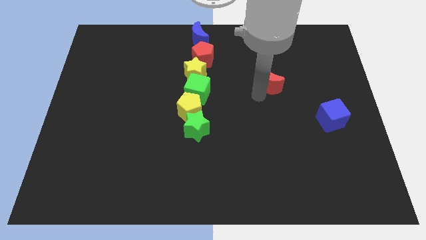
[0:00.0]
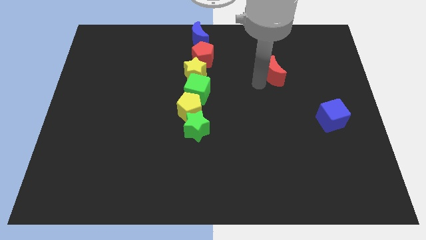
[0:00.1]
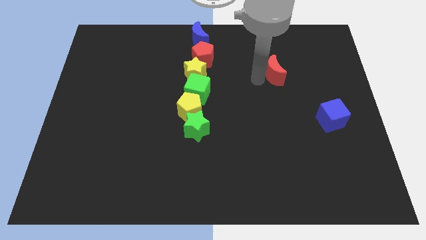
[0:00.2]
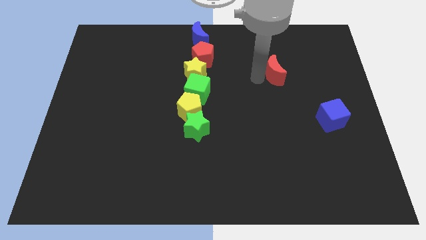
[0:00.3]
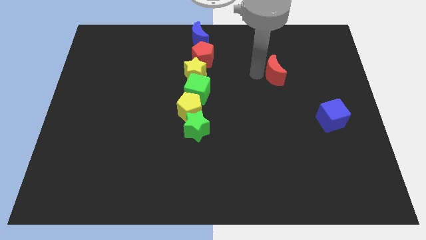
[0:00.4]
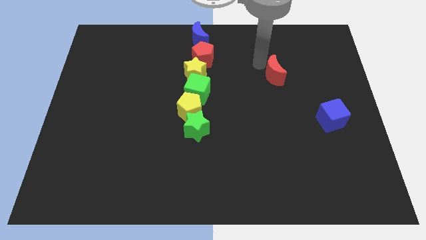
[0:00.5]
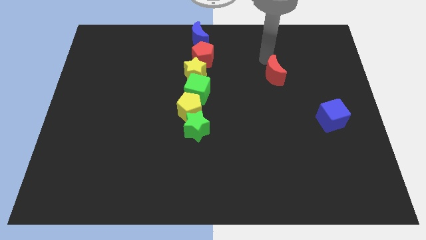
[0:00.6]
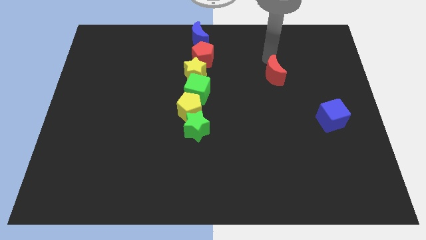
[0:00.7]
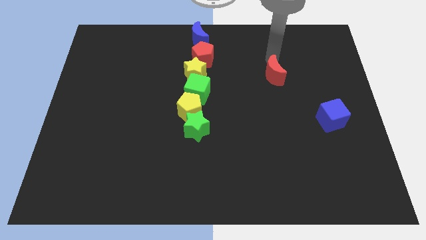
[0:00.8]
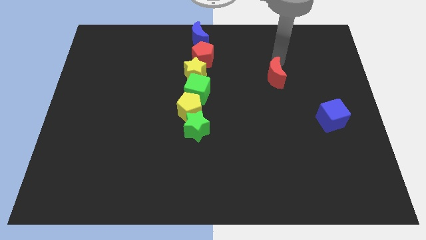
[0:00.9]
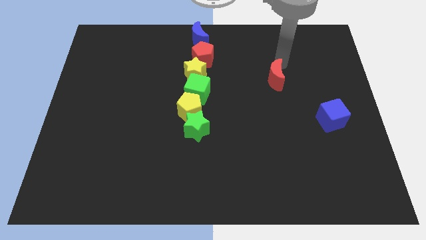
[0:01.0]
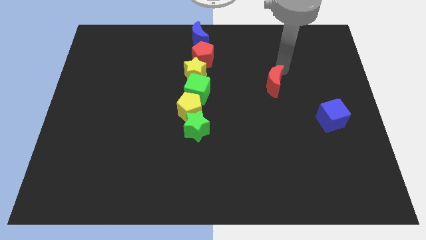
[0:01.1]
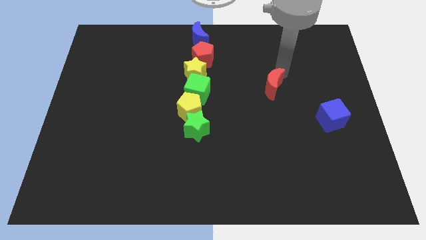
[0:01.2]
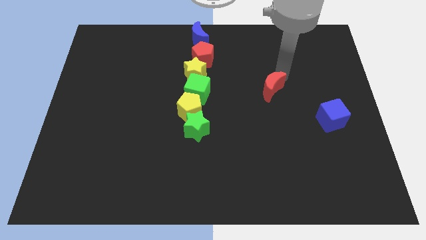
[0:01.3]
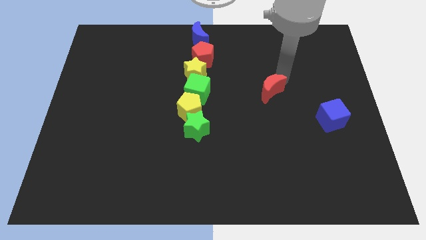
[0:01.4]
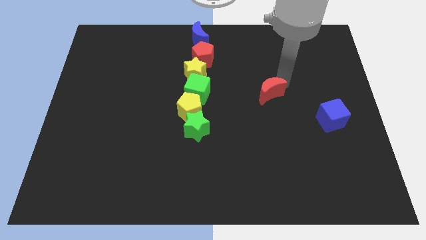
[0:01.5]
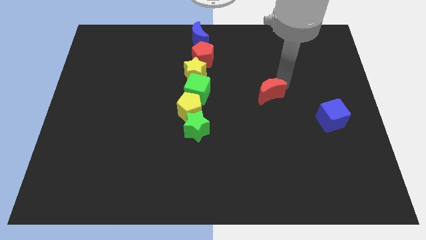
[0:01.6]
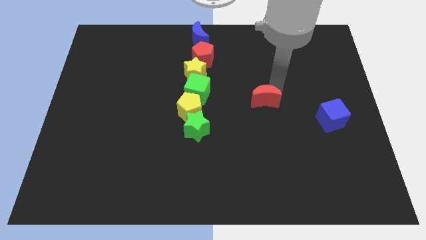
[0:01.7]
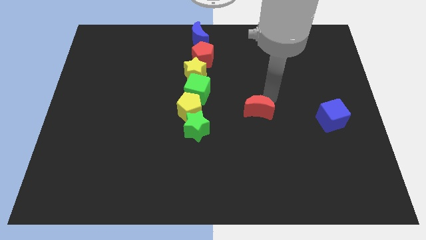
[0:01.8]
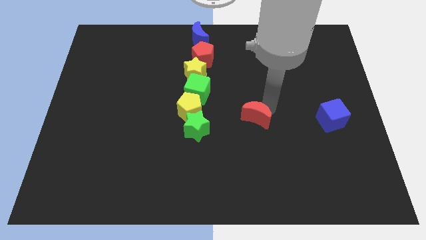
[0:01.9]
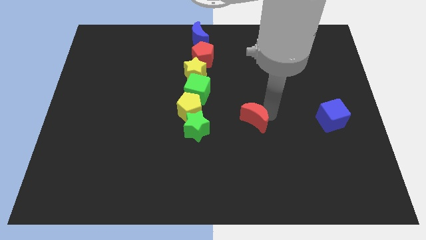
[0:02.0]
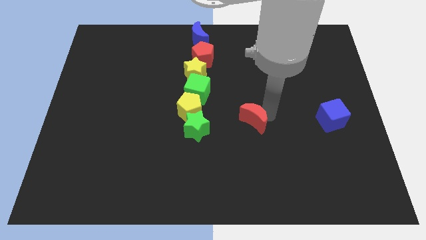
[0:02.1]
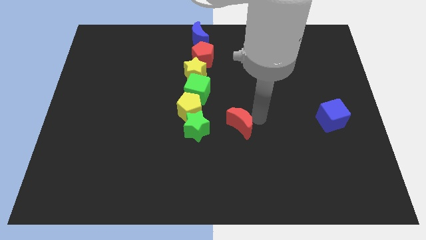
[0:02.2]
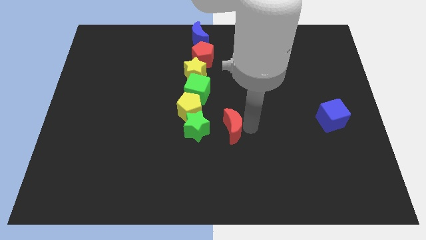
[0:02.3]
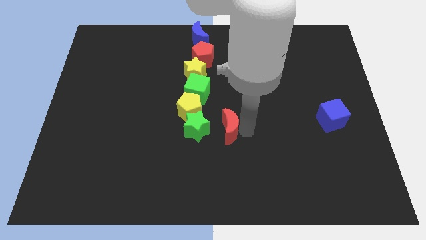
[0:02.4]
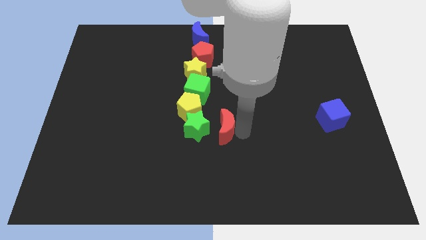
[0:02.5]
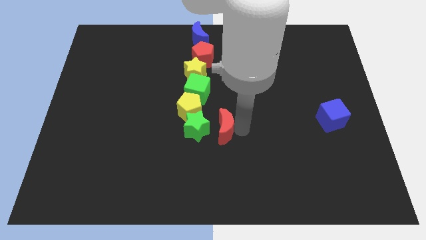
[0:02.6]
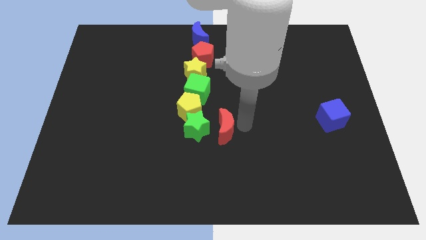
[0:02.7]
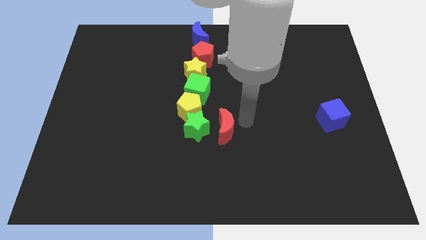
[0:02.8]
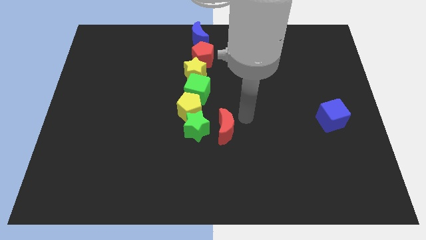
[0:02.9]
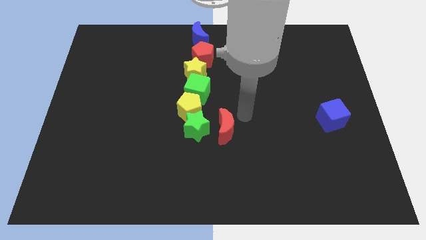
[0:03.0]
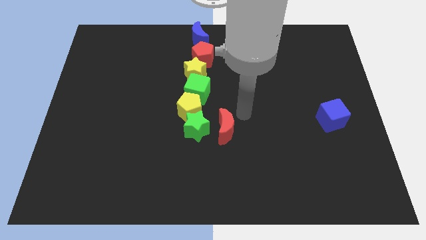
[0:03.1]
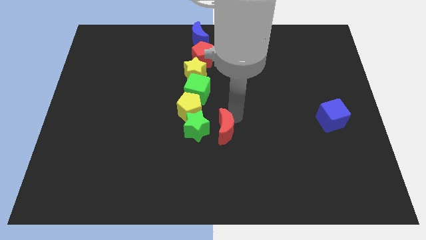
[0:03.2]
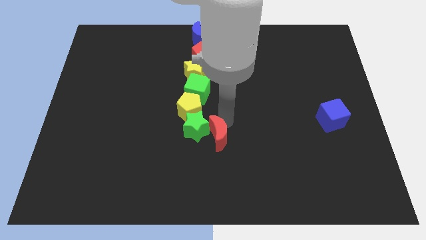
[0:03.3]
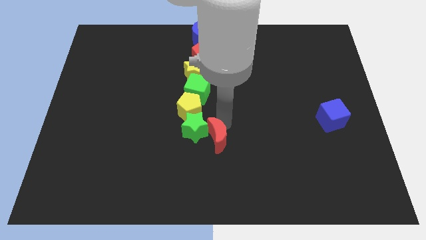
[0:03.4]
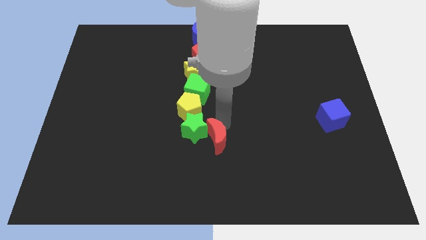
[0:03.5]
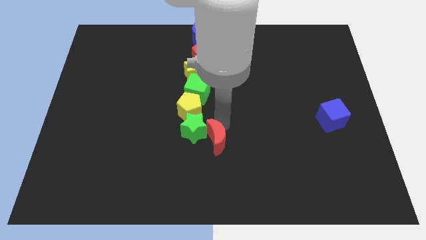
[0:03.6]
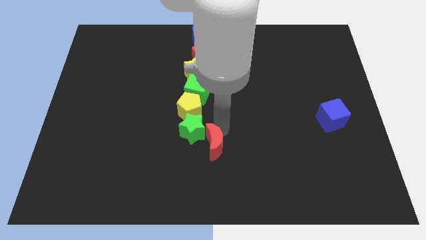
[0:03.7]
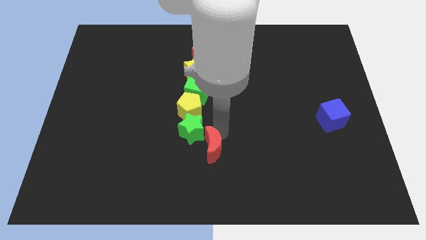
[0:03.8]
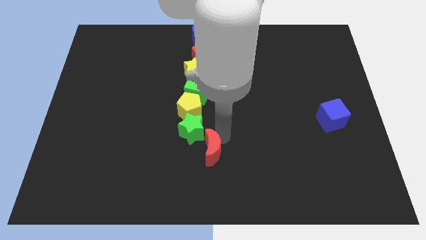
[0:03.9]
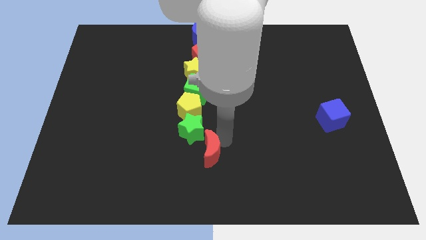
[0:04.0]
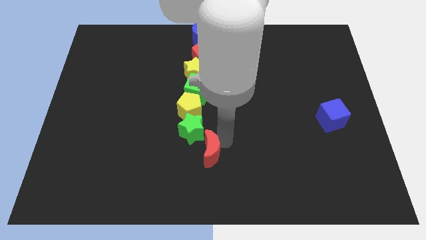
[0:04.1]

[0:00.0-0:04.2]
place the red crescent to right of green star

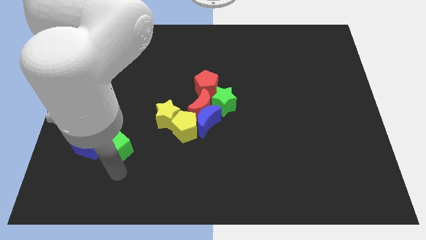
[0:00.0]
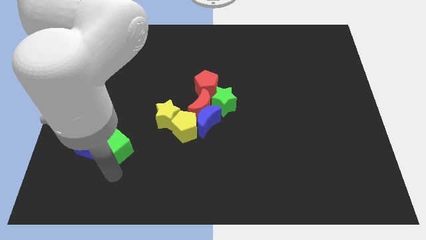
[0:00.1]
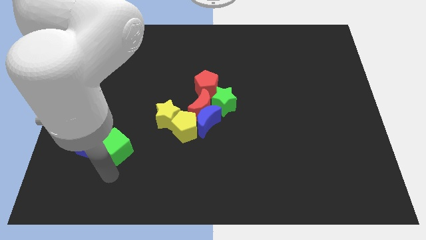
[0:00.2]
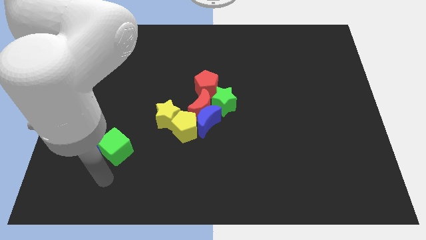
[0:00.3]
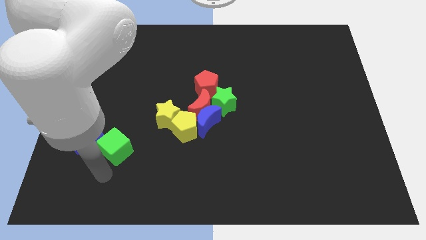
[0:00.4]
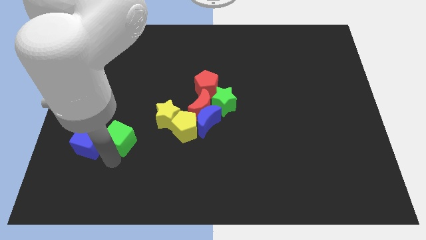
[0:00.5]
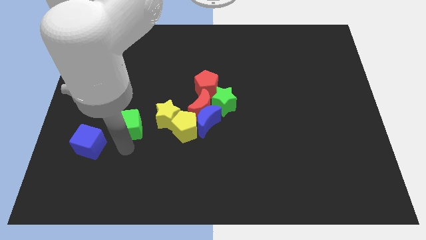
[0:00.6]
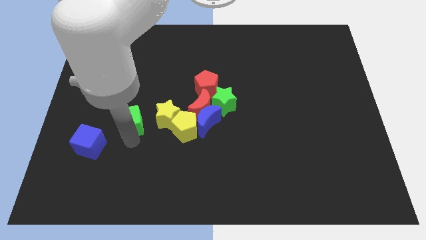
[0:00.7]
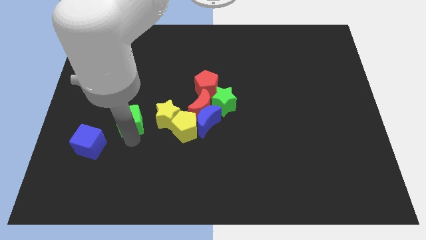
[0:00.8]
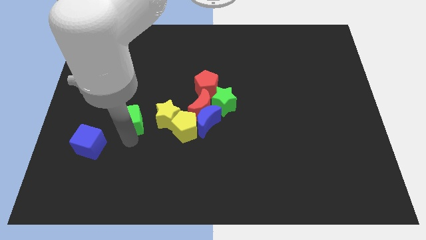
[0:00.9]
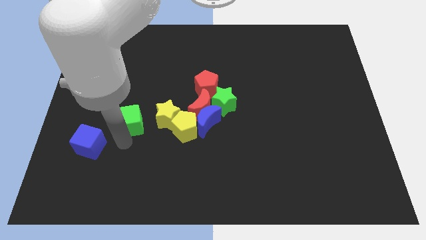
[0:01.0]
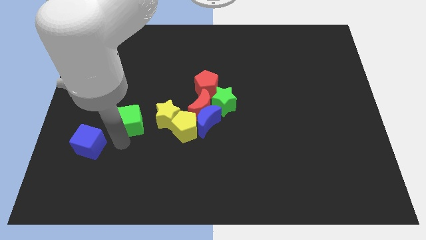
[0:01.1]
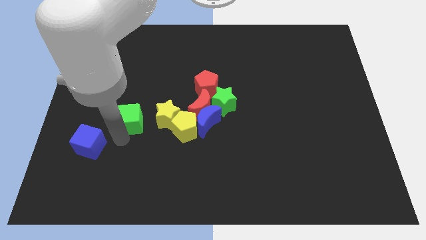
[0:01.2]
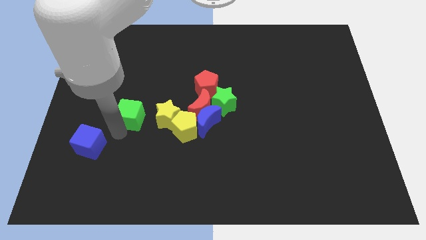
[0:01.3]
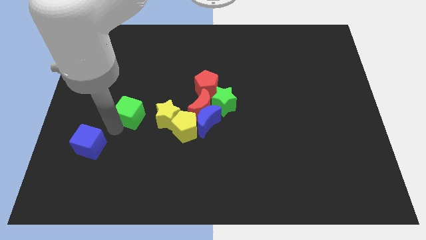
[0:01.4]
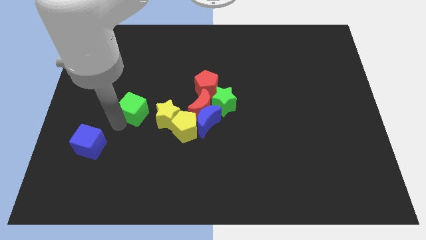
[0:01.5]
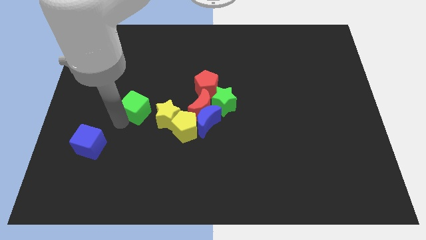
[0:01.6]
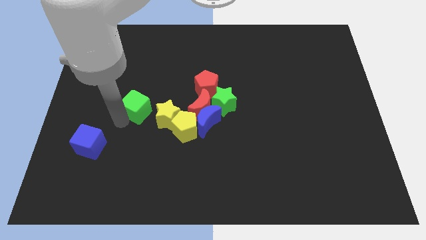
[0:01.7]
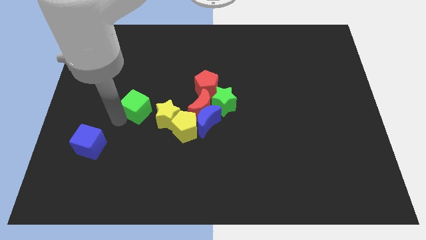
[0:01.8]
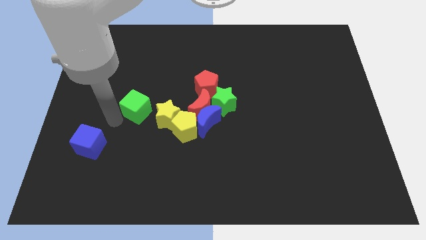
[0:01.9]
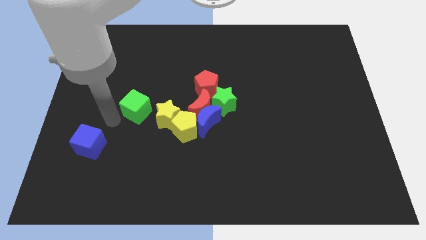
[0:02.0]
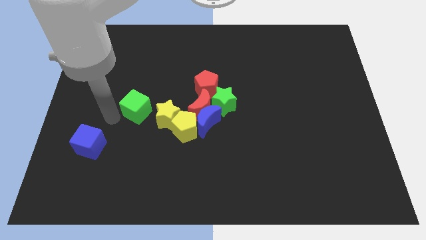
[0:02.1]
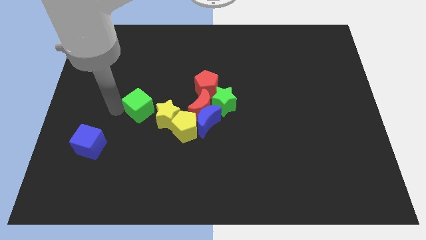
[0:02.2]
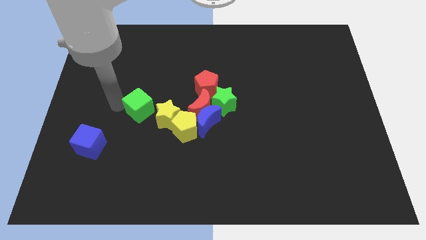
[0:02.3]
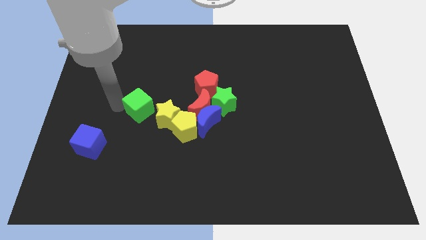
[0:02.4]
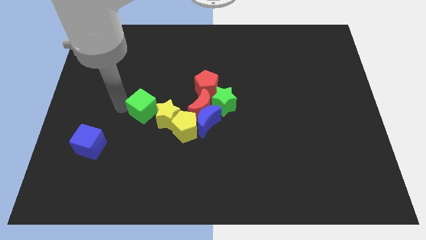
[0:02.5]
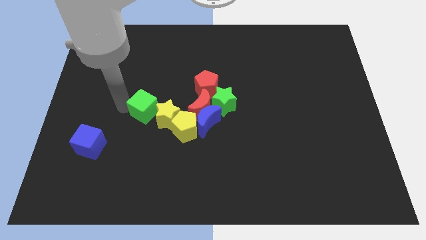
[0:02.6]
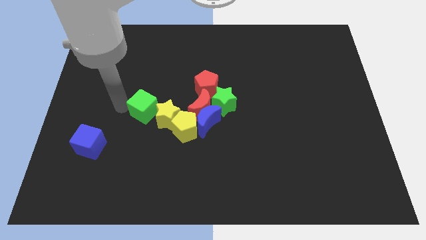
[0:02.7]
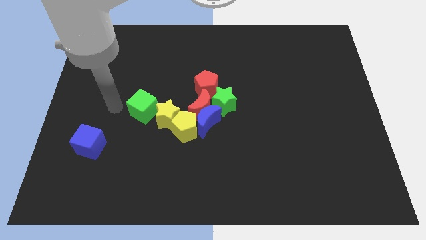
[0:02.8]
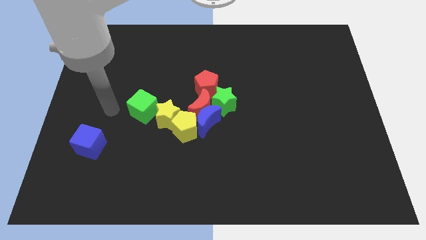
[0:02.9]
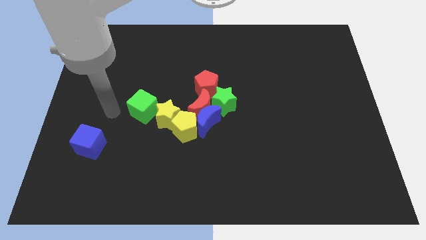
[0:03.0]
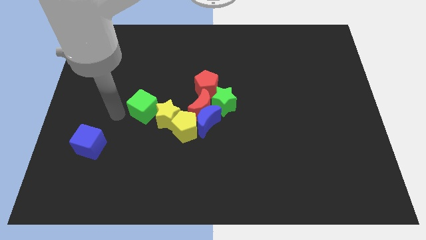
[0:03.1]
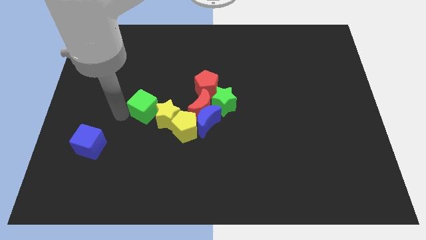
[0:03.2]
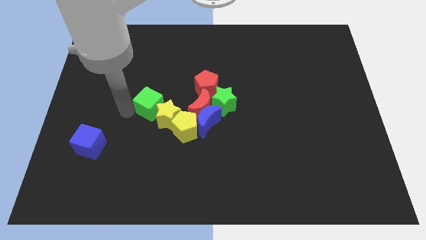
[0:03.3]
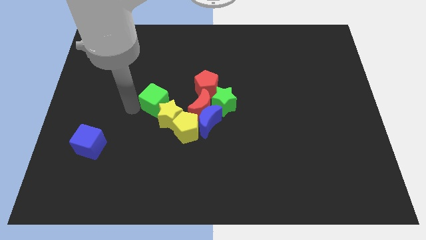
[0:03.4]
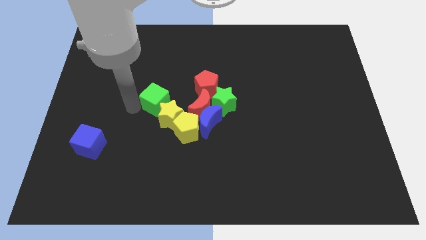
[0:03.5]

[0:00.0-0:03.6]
put the green cube on the left side of yellow star

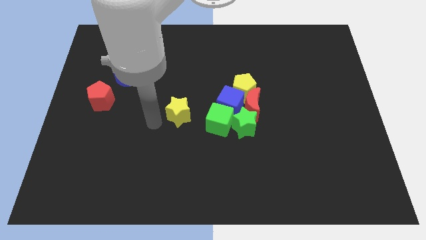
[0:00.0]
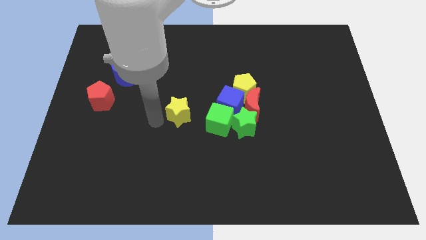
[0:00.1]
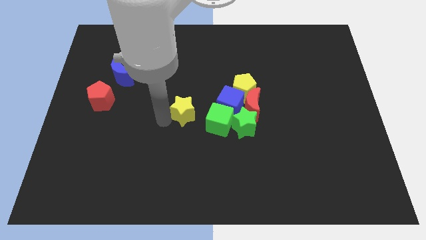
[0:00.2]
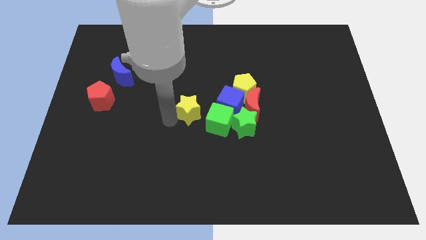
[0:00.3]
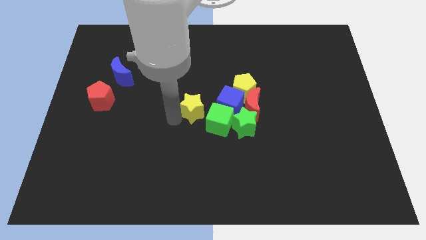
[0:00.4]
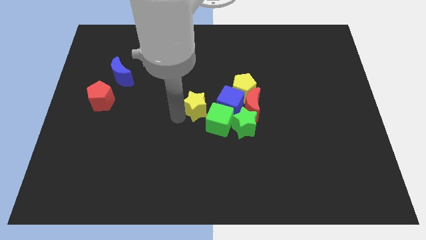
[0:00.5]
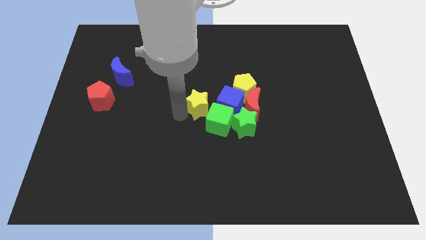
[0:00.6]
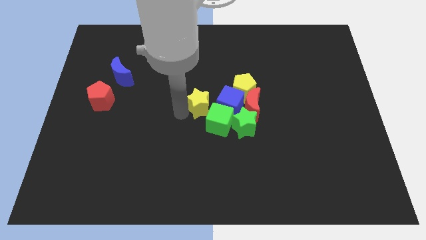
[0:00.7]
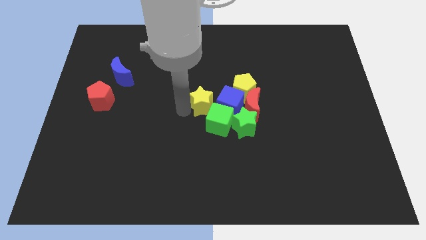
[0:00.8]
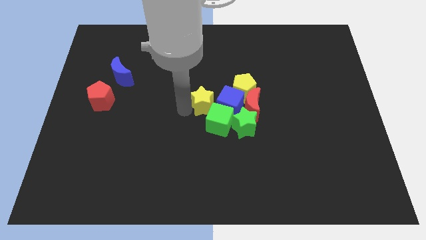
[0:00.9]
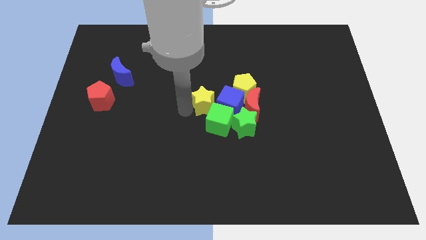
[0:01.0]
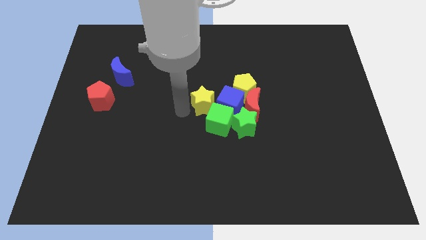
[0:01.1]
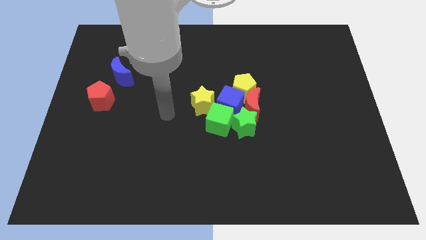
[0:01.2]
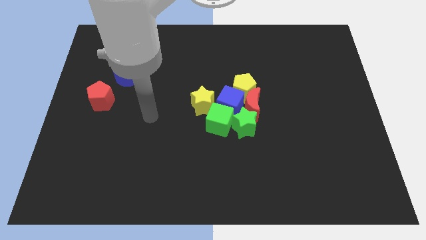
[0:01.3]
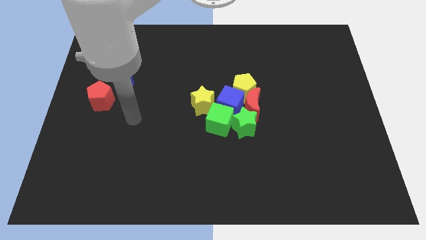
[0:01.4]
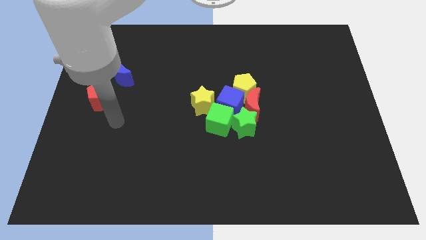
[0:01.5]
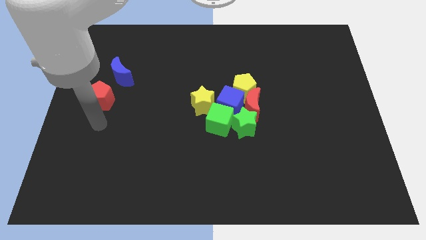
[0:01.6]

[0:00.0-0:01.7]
move the yellow star into the group of blocks
